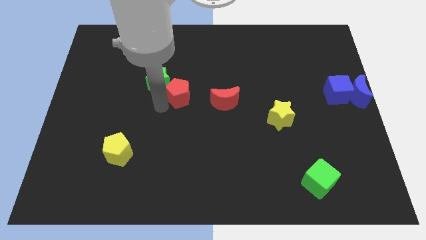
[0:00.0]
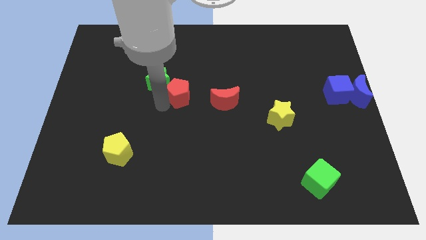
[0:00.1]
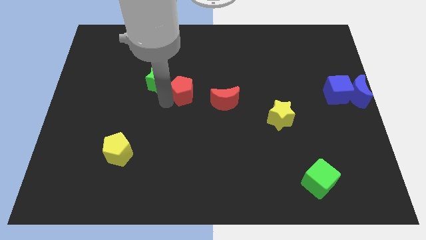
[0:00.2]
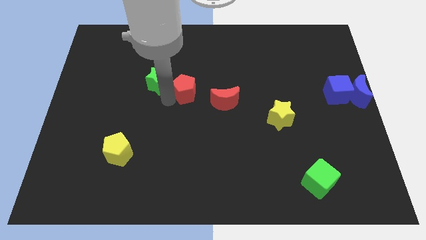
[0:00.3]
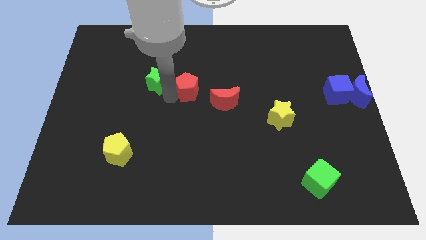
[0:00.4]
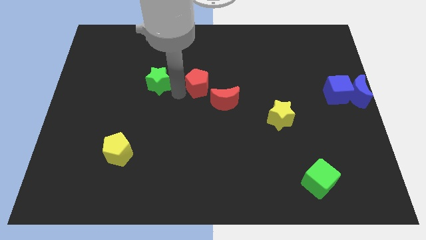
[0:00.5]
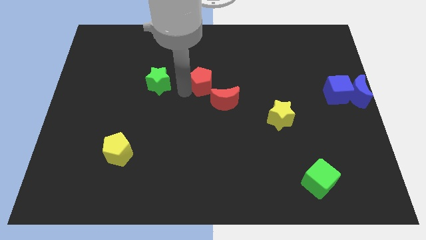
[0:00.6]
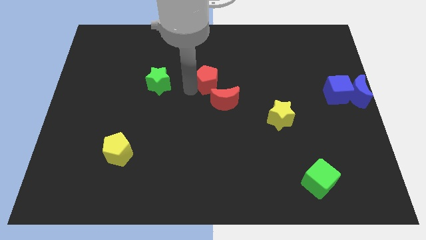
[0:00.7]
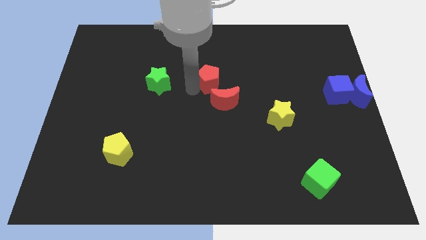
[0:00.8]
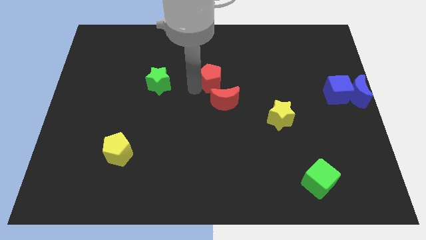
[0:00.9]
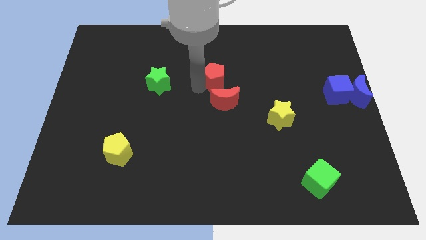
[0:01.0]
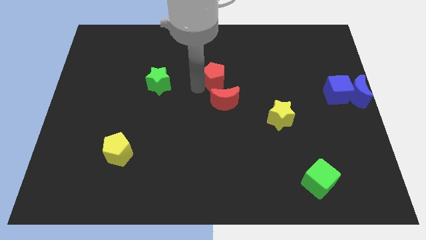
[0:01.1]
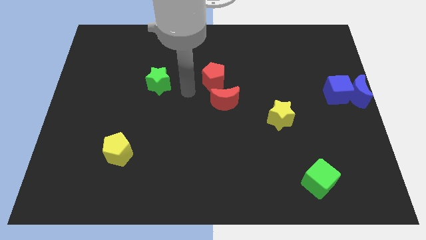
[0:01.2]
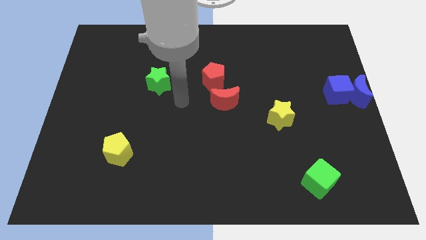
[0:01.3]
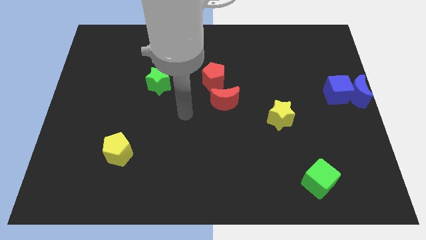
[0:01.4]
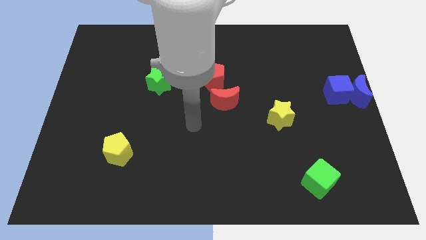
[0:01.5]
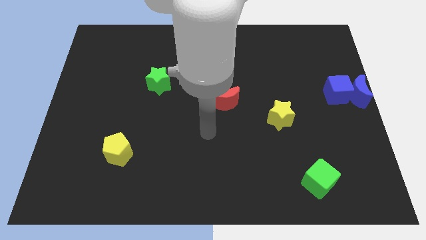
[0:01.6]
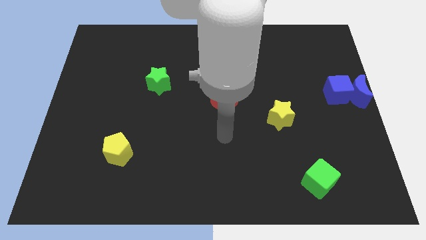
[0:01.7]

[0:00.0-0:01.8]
place the red pentagon above the red moon

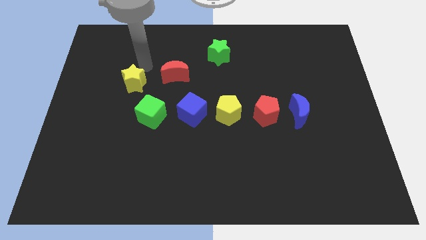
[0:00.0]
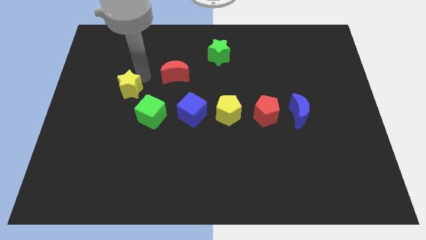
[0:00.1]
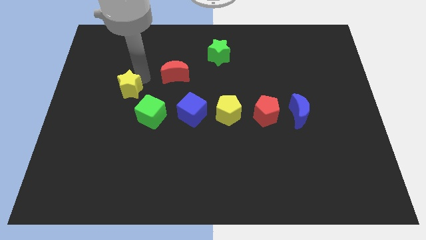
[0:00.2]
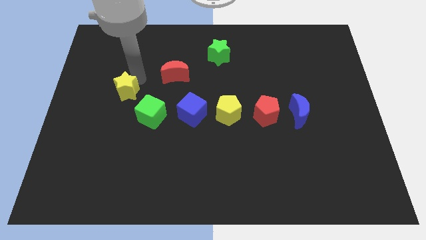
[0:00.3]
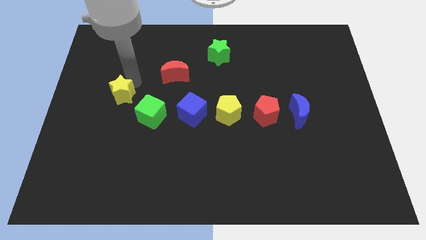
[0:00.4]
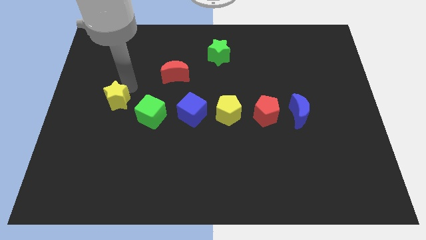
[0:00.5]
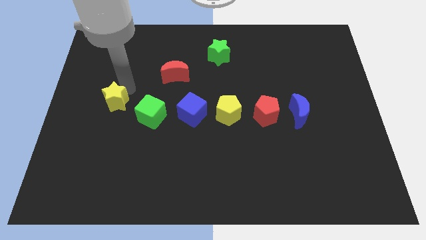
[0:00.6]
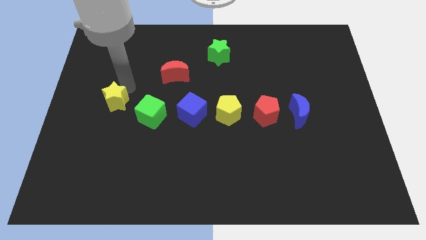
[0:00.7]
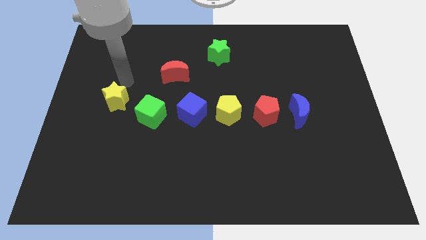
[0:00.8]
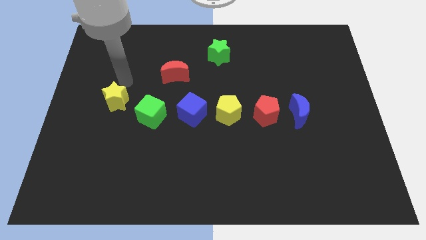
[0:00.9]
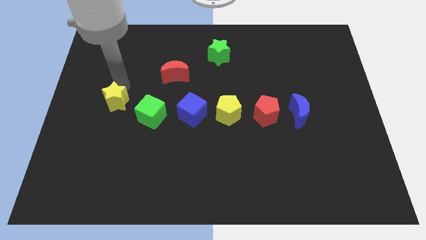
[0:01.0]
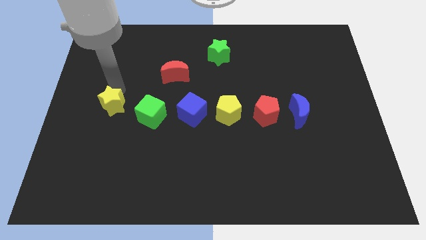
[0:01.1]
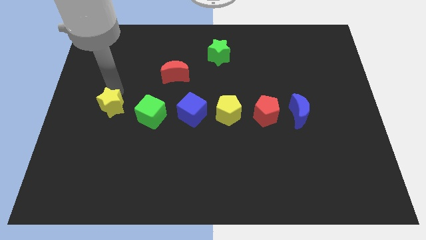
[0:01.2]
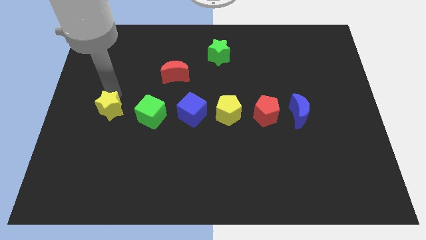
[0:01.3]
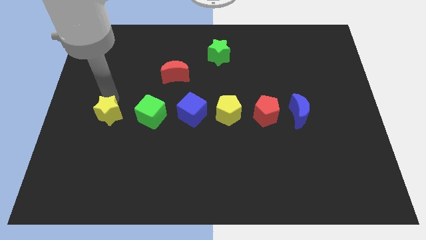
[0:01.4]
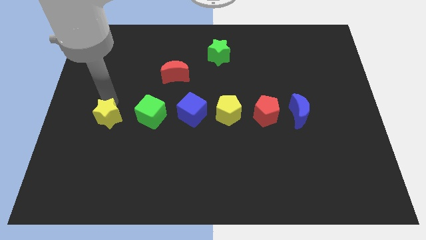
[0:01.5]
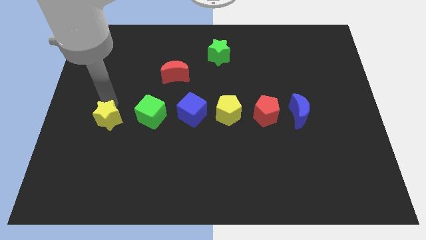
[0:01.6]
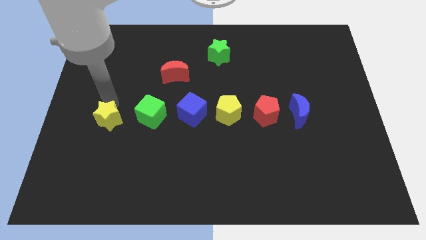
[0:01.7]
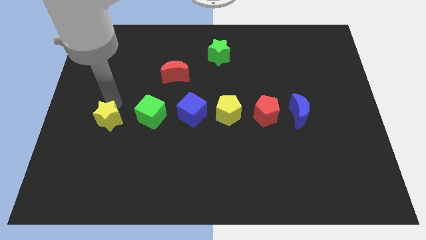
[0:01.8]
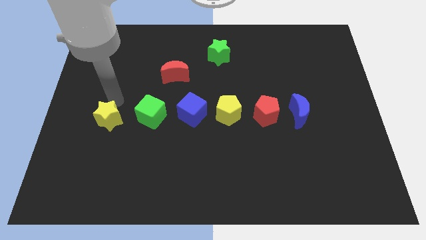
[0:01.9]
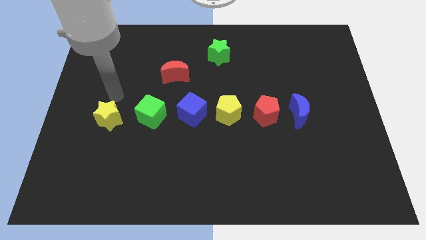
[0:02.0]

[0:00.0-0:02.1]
place the yellow star to the left side of the green cube

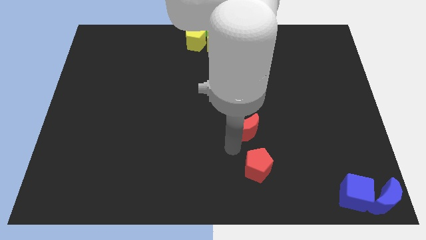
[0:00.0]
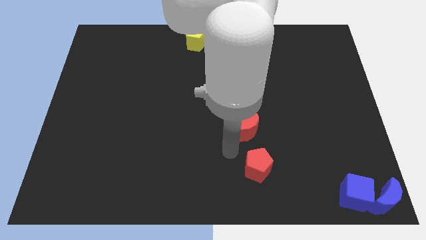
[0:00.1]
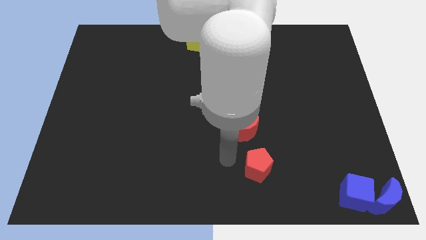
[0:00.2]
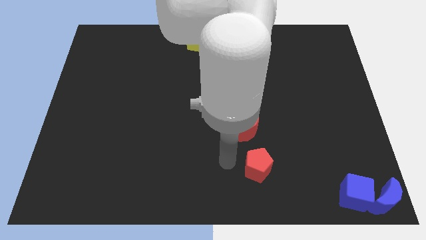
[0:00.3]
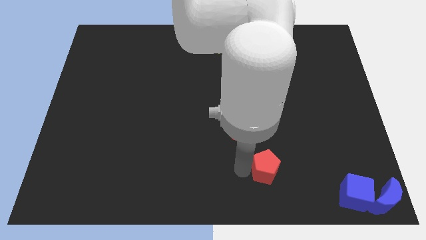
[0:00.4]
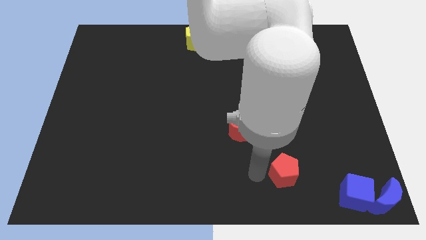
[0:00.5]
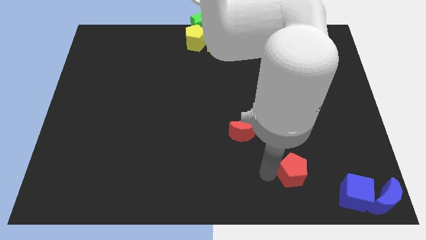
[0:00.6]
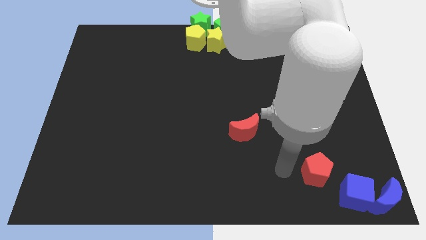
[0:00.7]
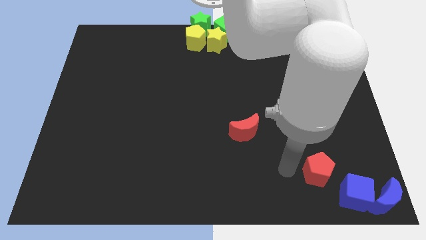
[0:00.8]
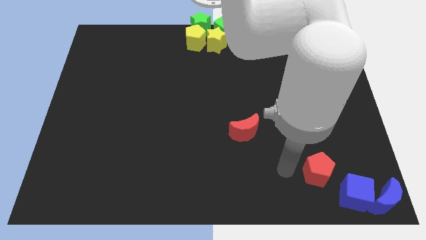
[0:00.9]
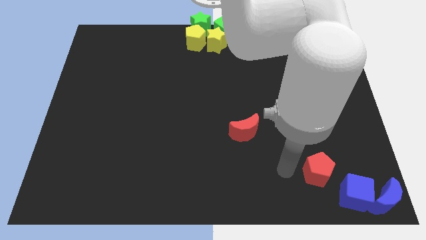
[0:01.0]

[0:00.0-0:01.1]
push the red pentagon towards the blue cube

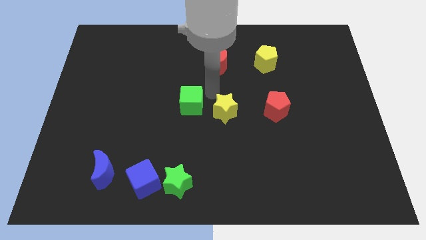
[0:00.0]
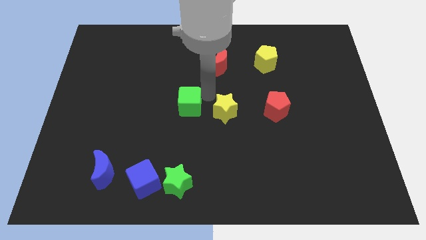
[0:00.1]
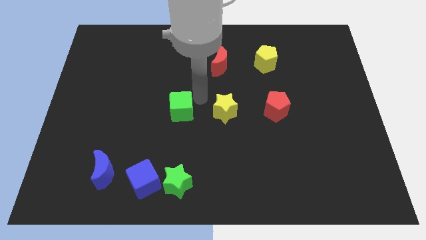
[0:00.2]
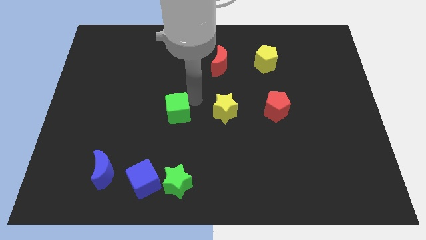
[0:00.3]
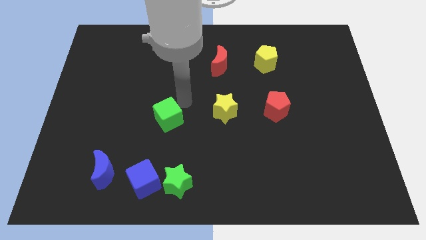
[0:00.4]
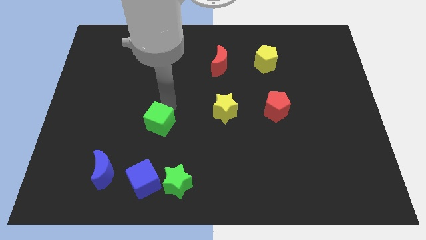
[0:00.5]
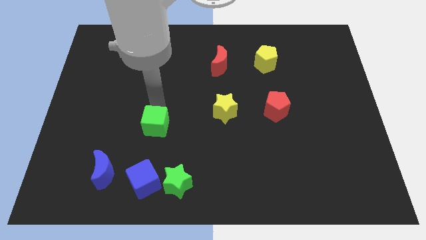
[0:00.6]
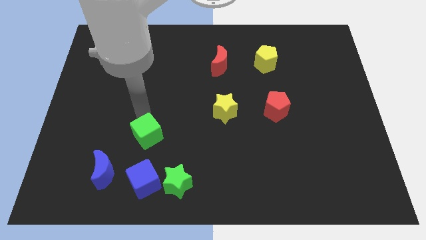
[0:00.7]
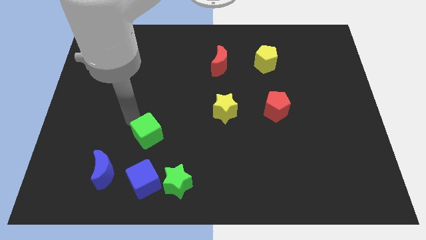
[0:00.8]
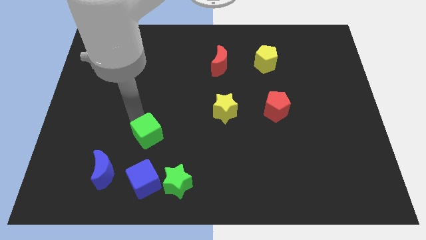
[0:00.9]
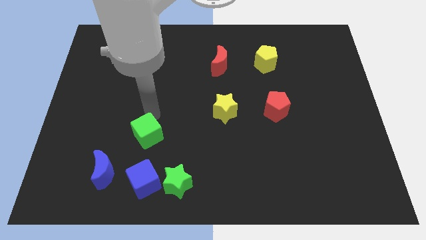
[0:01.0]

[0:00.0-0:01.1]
place the green cube above the blue cube

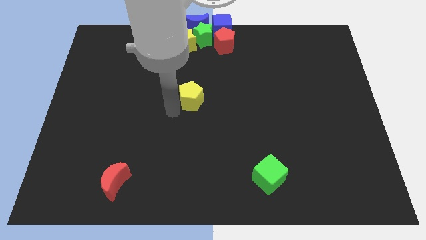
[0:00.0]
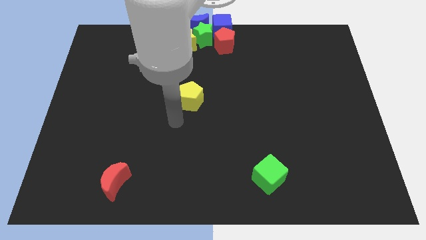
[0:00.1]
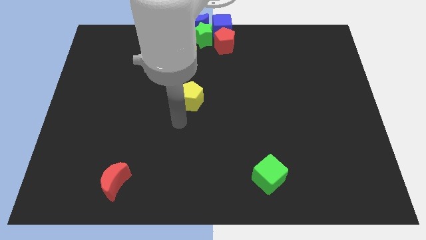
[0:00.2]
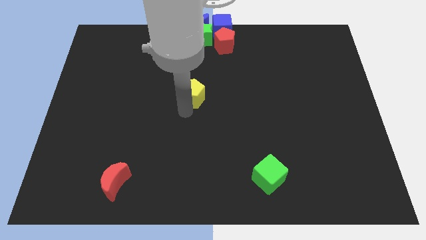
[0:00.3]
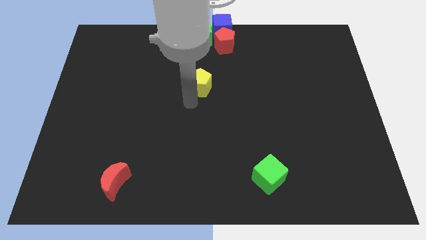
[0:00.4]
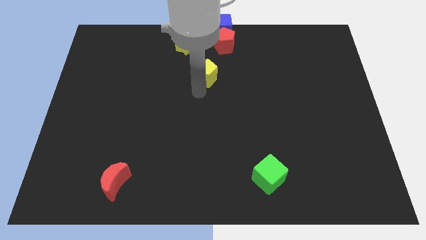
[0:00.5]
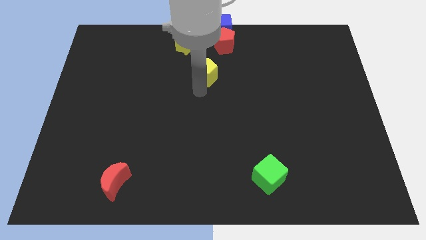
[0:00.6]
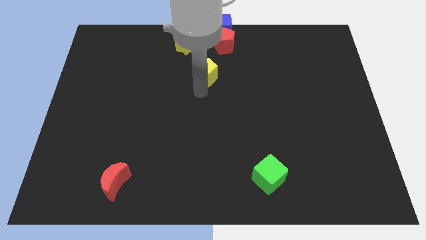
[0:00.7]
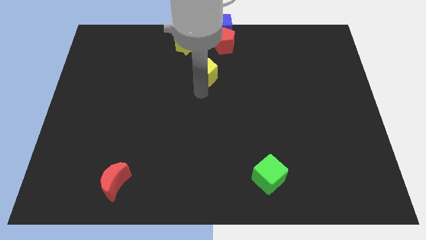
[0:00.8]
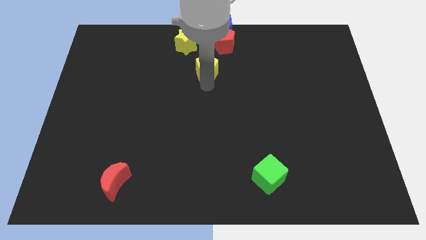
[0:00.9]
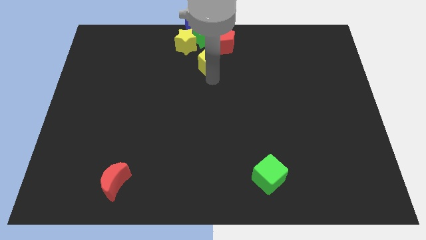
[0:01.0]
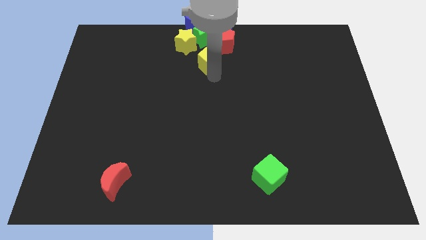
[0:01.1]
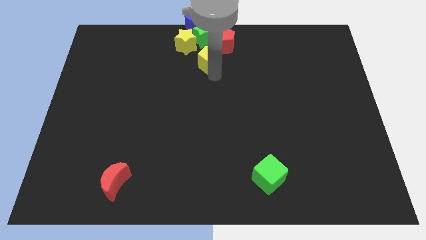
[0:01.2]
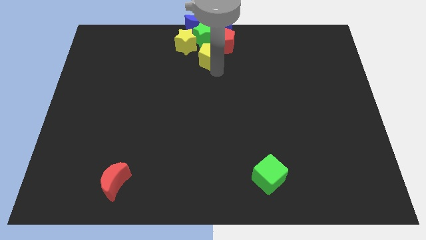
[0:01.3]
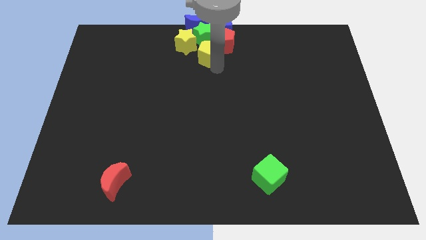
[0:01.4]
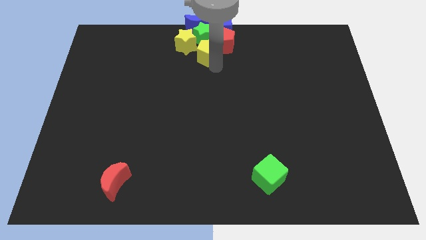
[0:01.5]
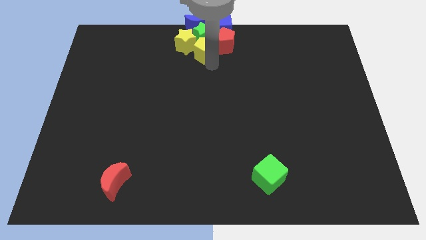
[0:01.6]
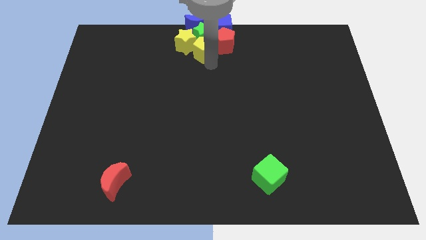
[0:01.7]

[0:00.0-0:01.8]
place the yellow pentagon below the green star

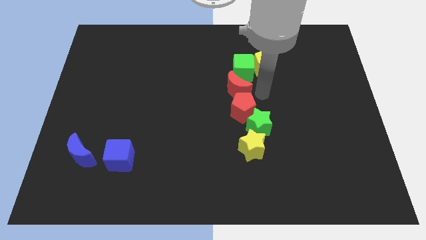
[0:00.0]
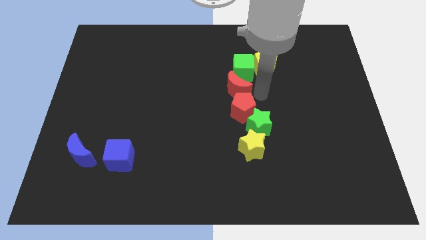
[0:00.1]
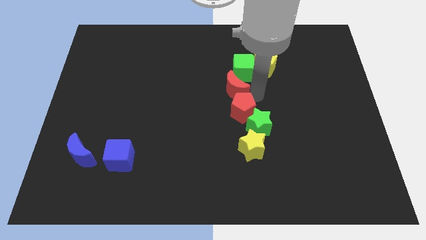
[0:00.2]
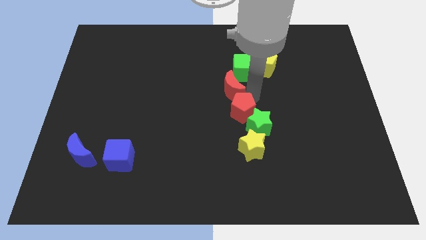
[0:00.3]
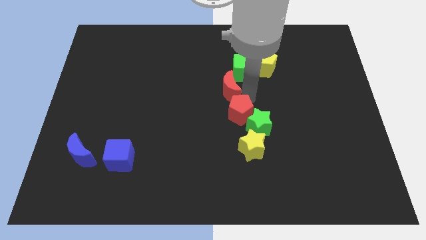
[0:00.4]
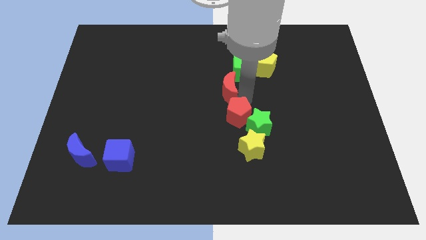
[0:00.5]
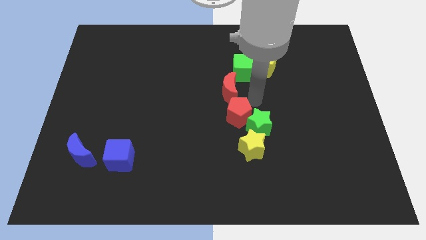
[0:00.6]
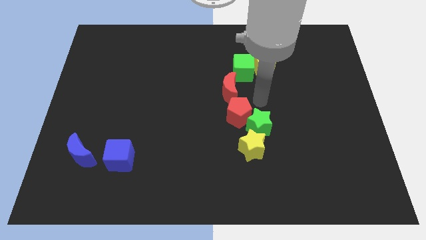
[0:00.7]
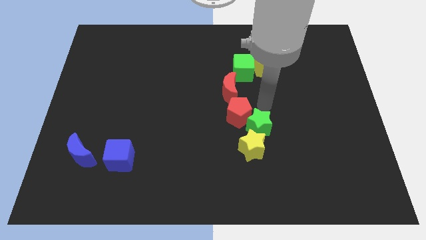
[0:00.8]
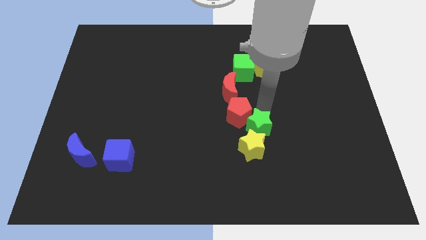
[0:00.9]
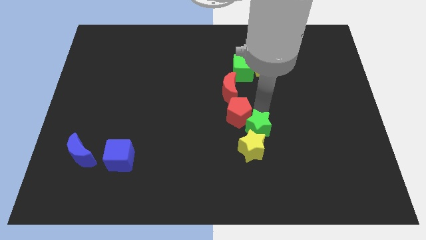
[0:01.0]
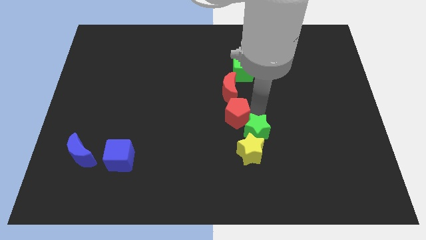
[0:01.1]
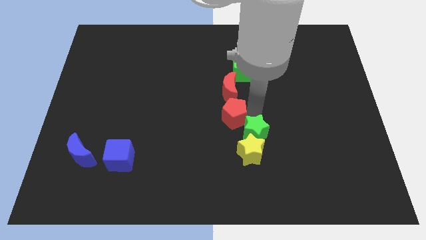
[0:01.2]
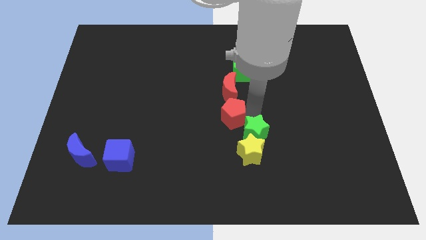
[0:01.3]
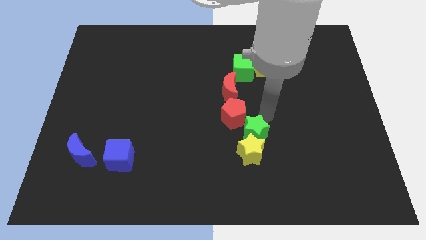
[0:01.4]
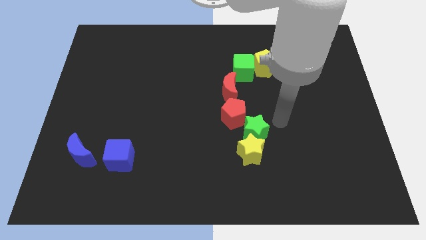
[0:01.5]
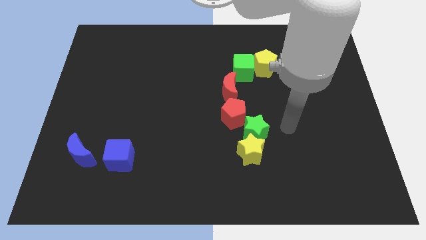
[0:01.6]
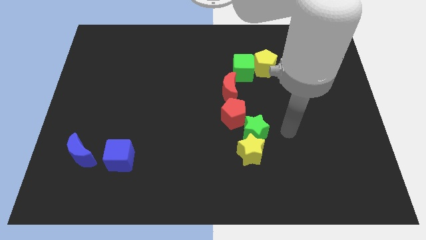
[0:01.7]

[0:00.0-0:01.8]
slightly push the red moon and red pentagon towards the left
